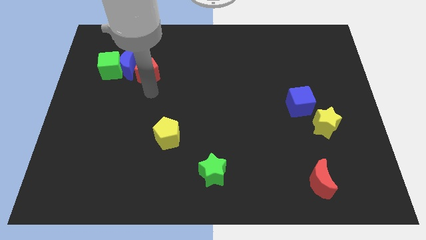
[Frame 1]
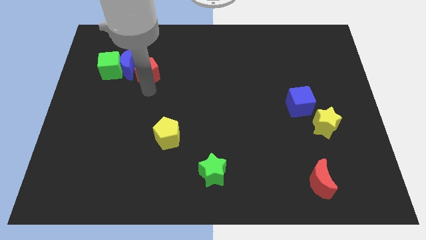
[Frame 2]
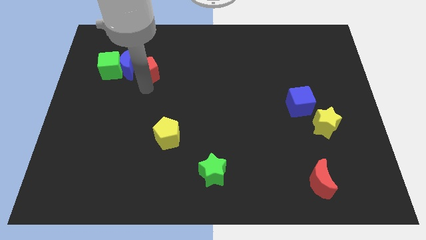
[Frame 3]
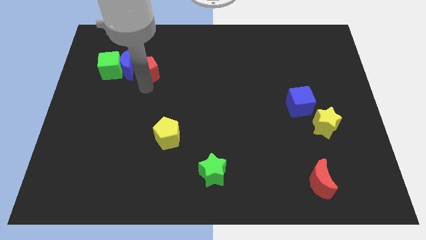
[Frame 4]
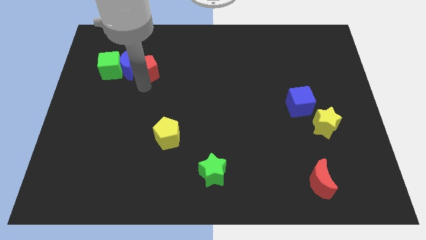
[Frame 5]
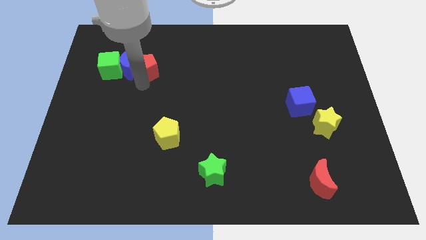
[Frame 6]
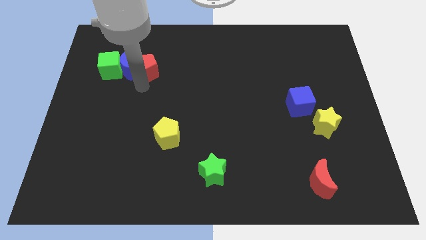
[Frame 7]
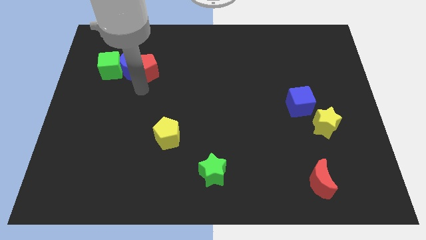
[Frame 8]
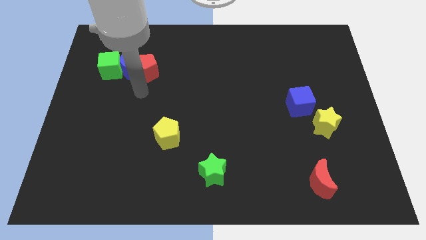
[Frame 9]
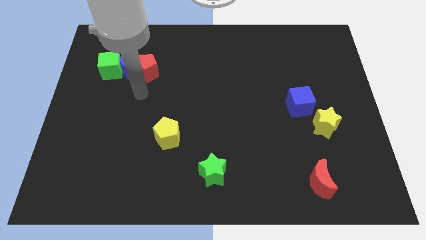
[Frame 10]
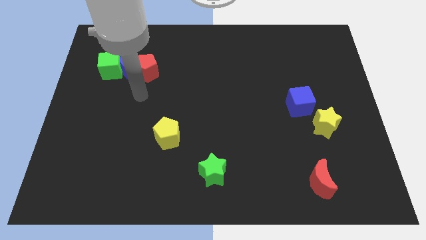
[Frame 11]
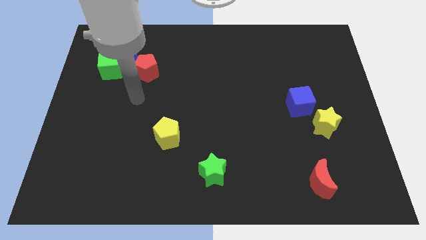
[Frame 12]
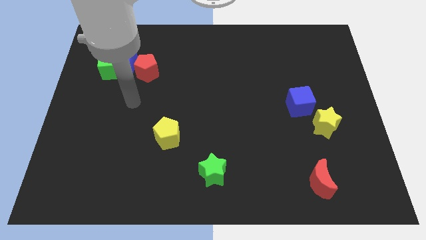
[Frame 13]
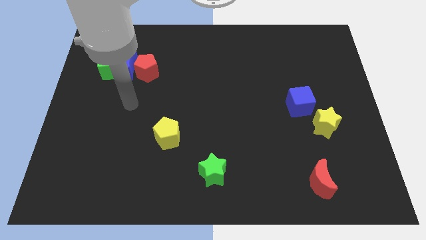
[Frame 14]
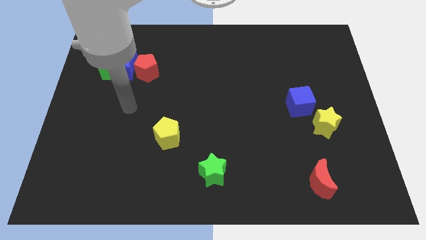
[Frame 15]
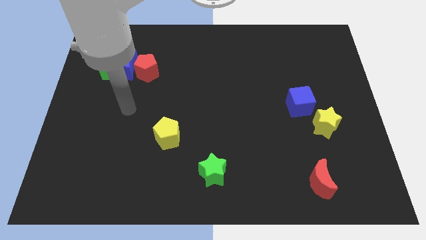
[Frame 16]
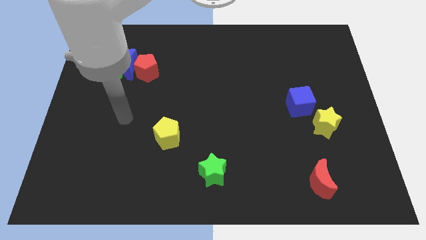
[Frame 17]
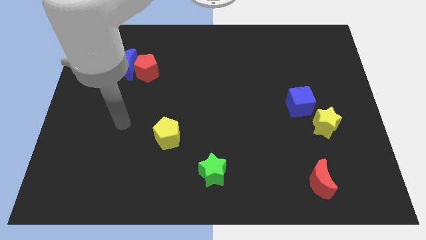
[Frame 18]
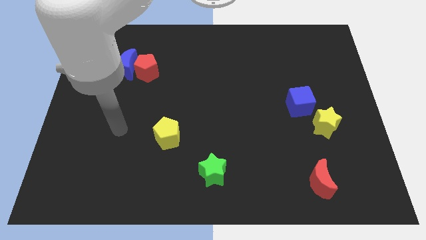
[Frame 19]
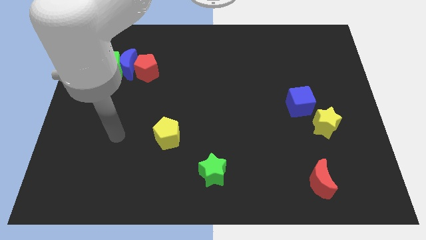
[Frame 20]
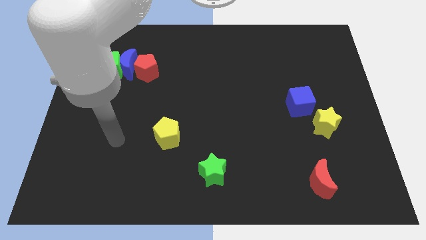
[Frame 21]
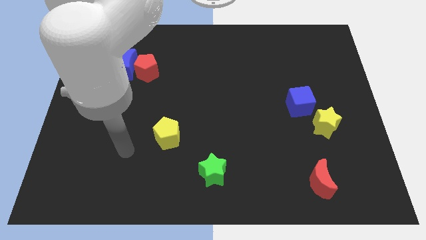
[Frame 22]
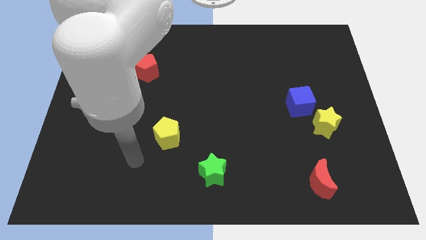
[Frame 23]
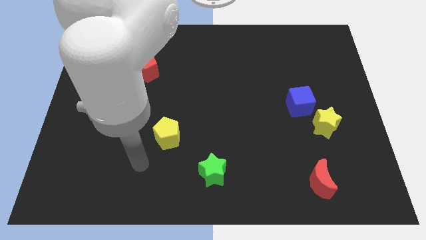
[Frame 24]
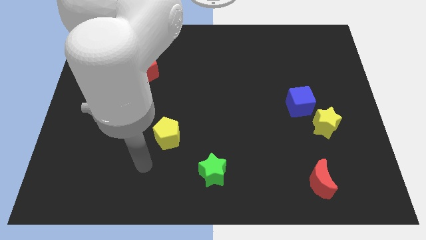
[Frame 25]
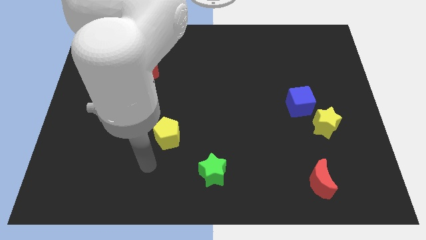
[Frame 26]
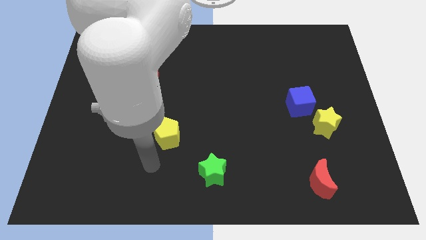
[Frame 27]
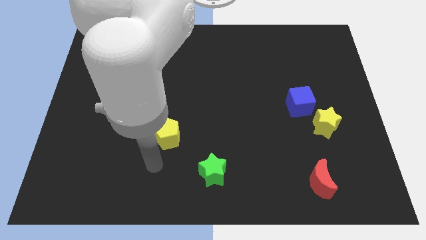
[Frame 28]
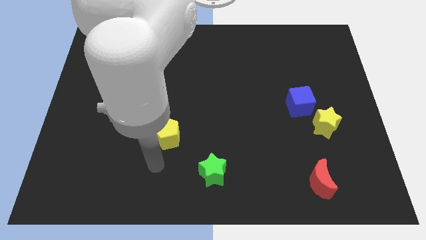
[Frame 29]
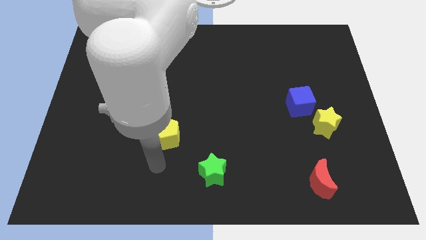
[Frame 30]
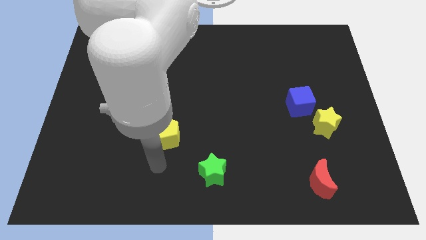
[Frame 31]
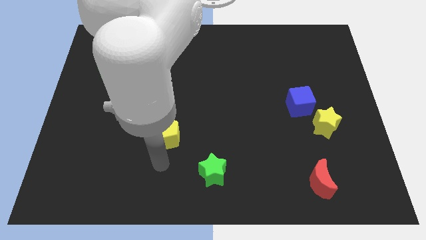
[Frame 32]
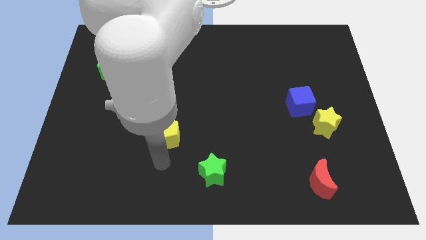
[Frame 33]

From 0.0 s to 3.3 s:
move your arm below the yellow pentagon

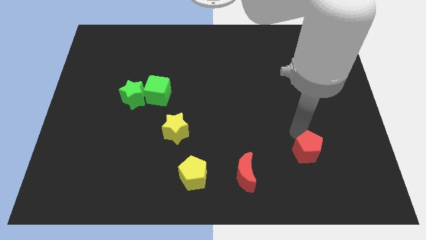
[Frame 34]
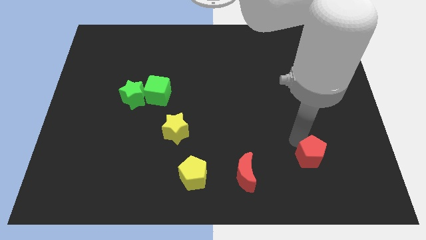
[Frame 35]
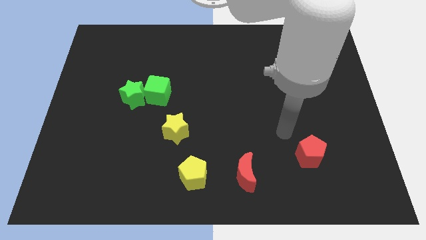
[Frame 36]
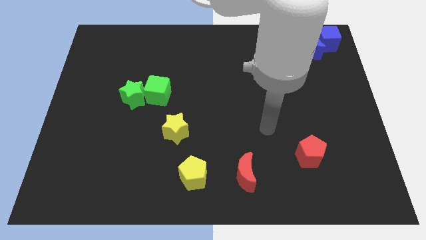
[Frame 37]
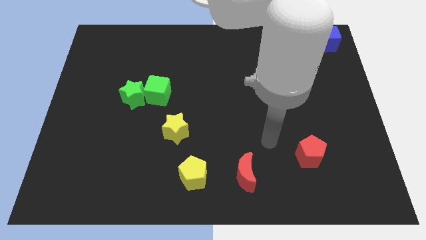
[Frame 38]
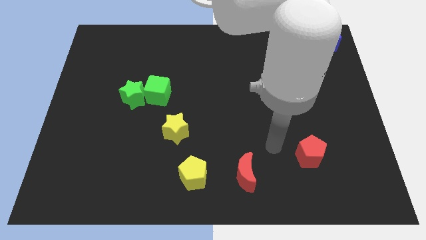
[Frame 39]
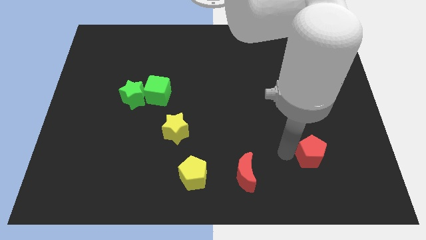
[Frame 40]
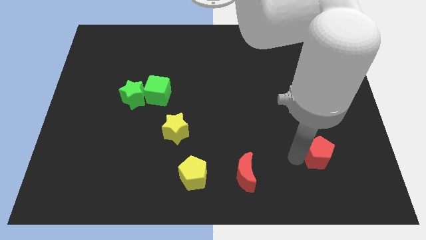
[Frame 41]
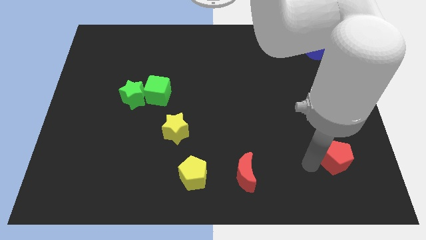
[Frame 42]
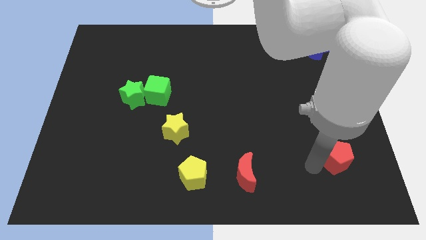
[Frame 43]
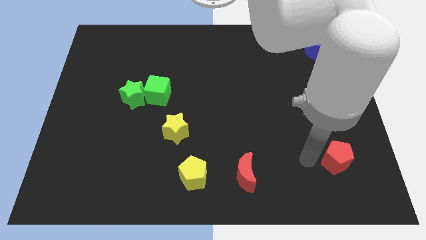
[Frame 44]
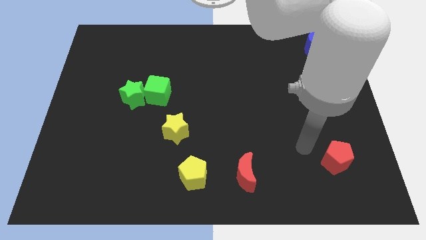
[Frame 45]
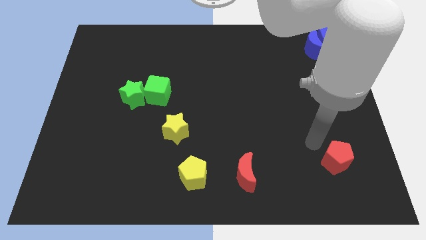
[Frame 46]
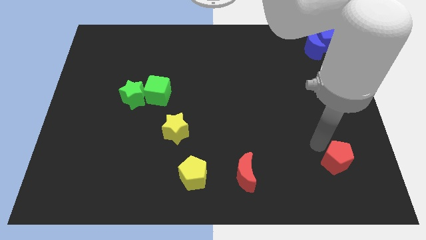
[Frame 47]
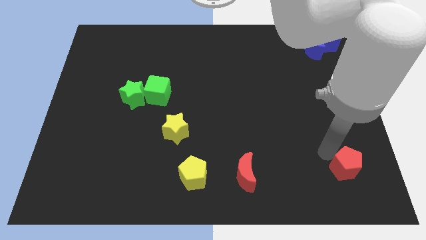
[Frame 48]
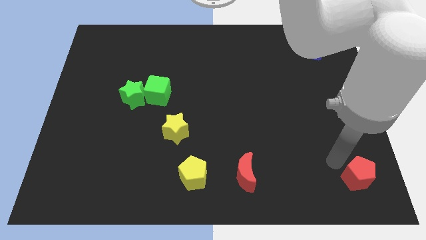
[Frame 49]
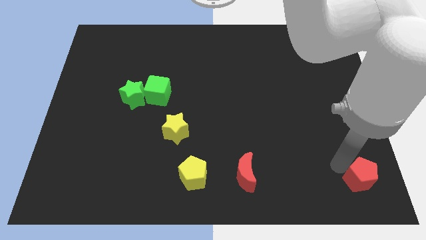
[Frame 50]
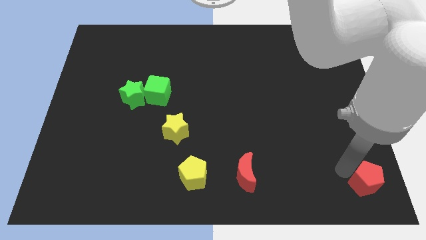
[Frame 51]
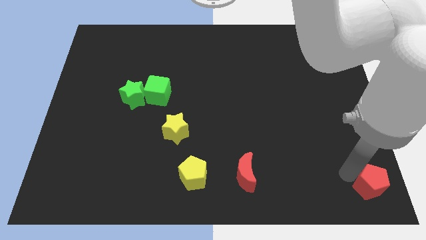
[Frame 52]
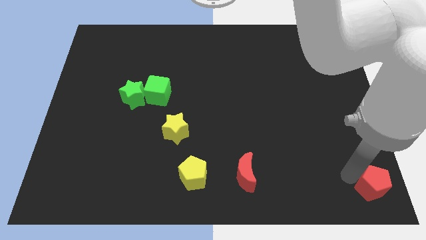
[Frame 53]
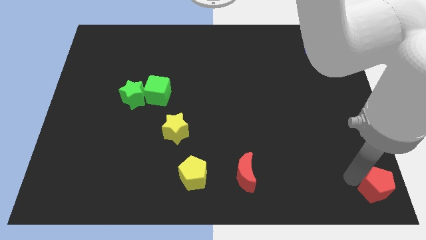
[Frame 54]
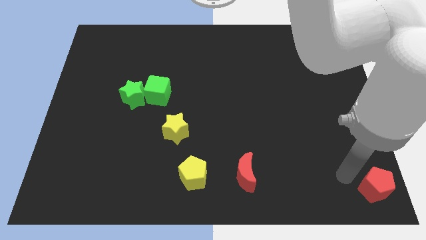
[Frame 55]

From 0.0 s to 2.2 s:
place red pentagon towards bottom right corner

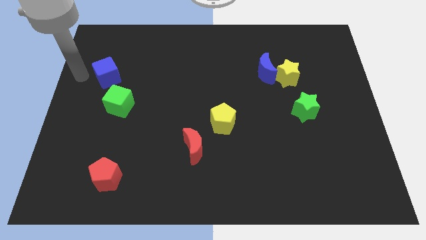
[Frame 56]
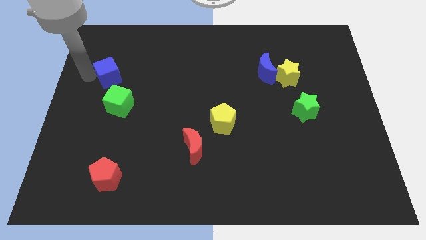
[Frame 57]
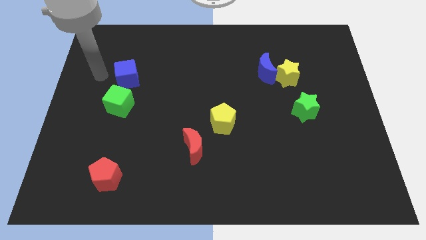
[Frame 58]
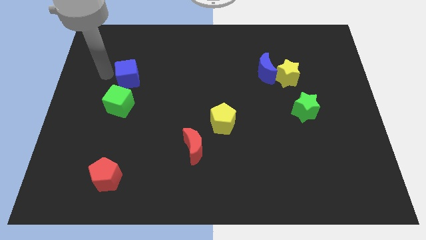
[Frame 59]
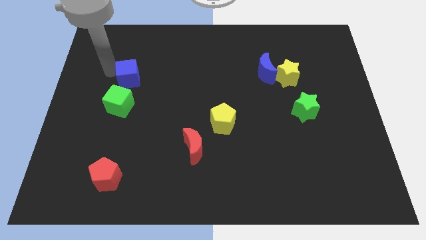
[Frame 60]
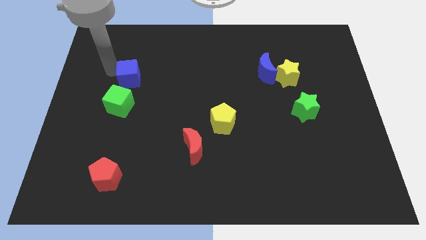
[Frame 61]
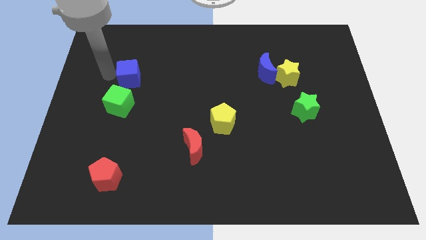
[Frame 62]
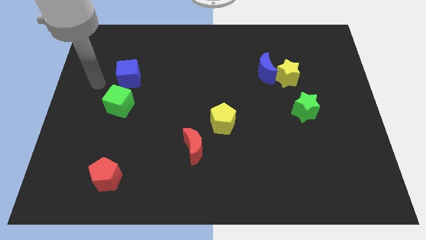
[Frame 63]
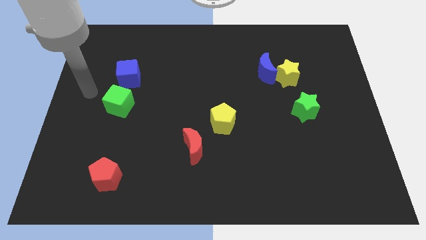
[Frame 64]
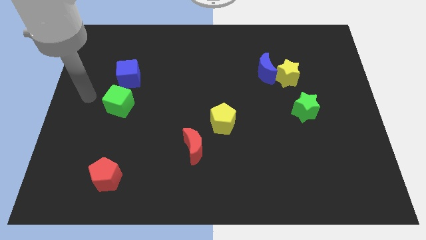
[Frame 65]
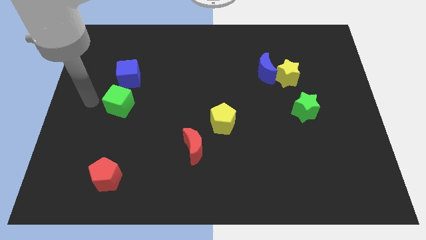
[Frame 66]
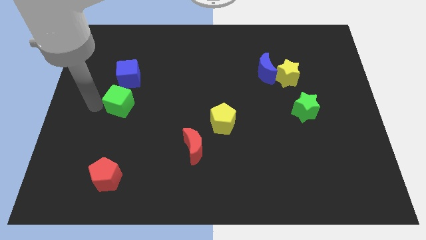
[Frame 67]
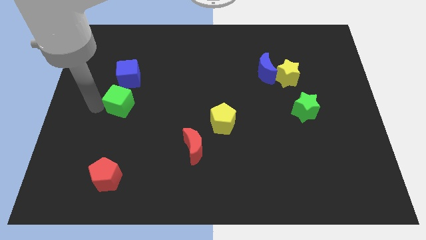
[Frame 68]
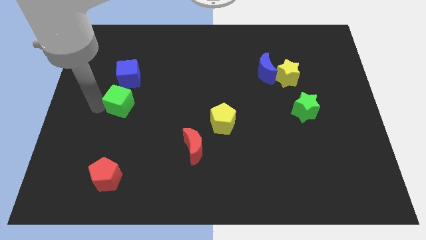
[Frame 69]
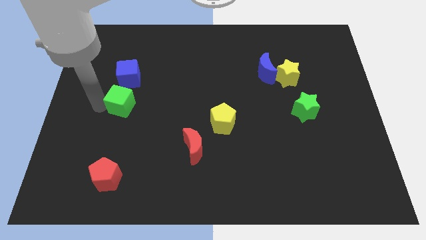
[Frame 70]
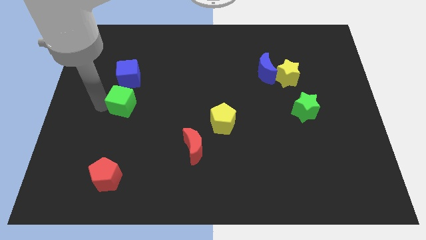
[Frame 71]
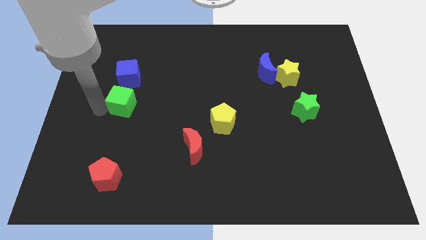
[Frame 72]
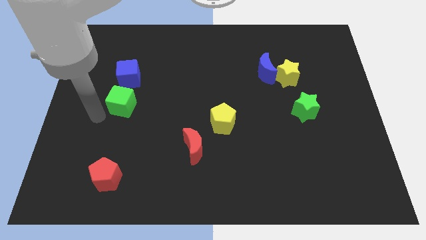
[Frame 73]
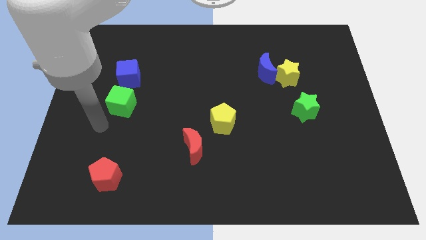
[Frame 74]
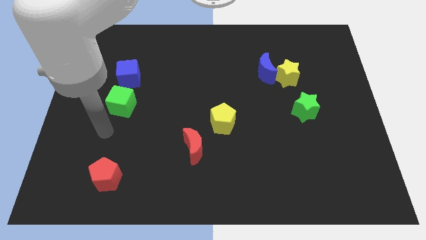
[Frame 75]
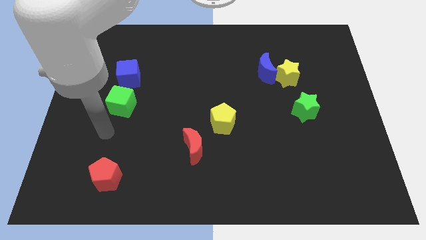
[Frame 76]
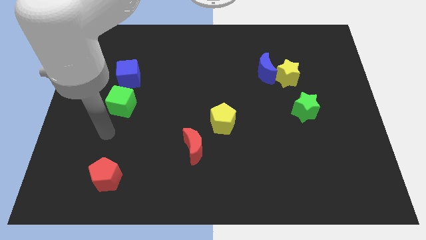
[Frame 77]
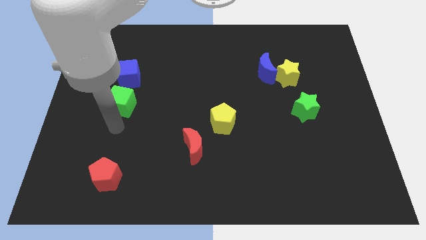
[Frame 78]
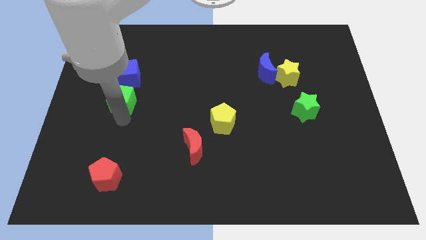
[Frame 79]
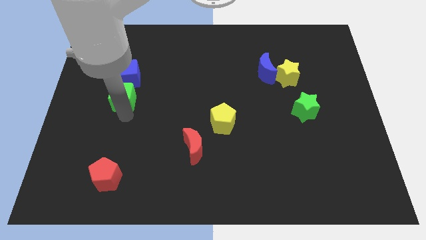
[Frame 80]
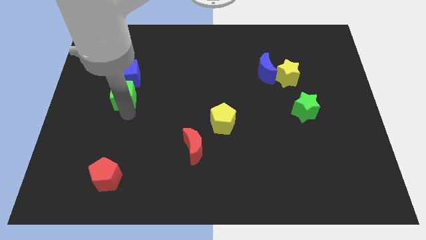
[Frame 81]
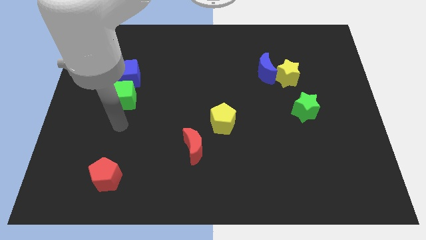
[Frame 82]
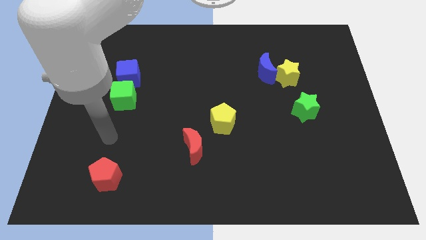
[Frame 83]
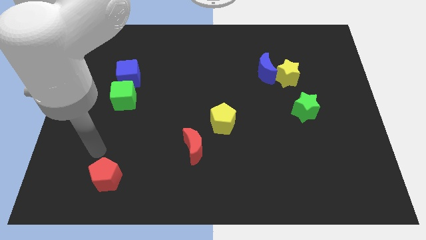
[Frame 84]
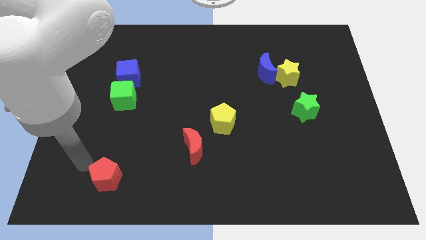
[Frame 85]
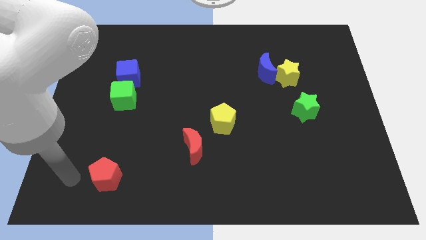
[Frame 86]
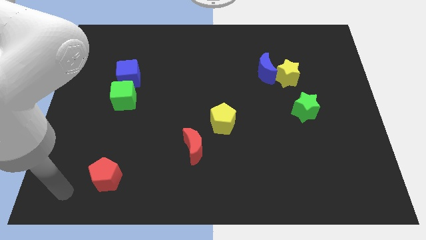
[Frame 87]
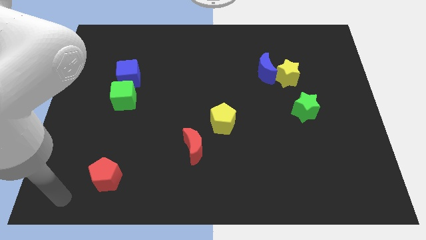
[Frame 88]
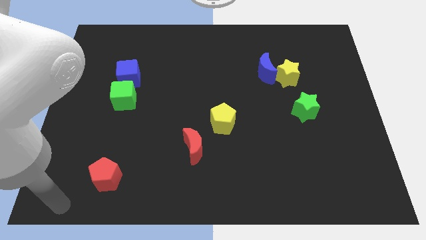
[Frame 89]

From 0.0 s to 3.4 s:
place the green cube below the blue cube

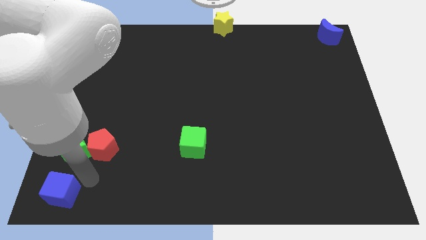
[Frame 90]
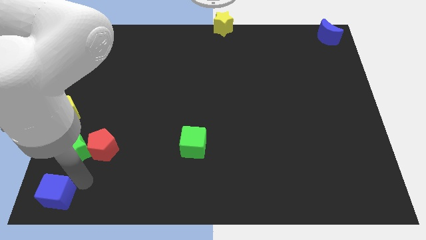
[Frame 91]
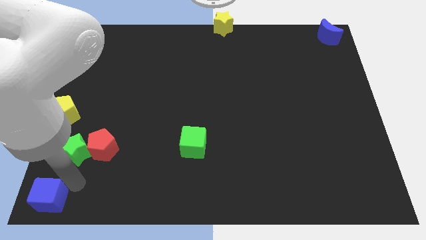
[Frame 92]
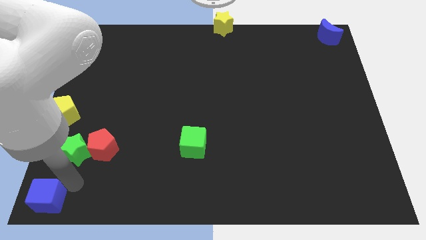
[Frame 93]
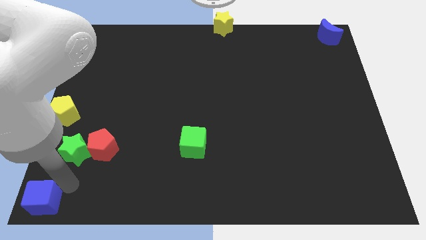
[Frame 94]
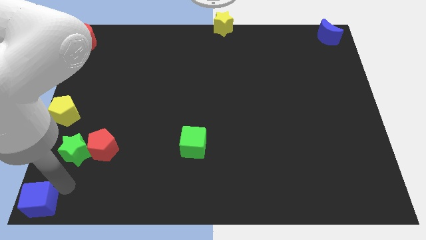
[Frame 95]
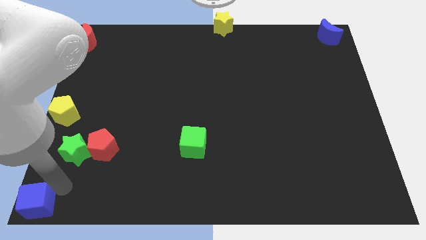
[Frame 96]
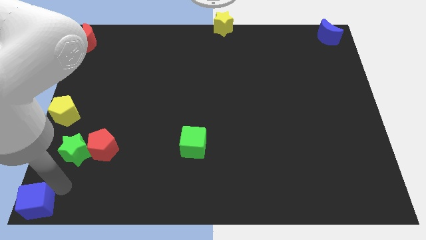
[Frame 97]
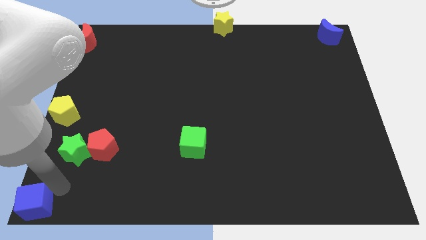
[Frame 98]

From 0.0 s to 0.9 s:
place blue cube on the down left corner of the board
